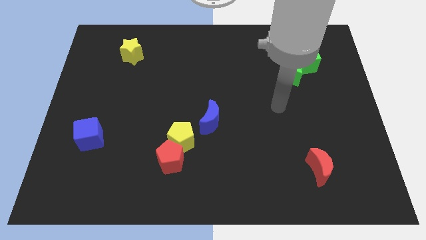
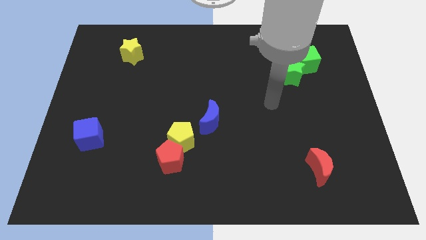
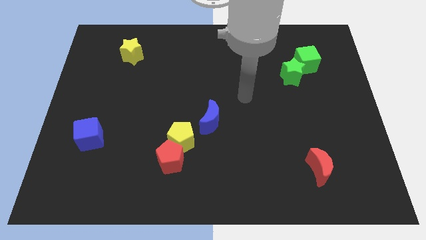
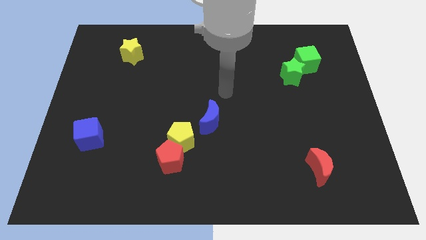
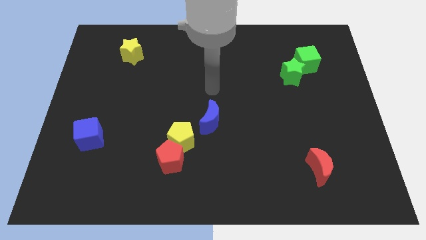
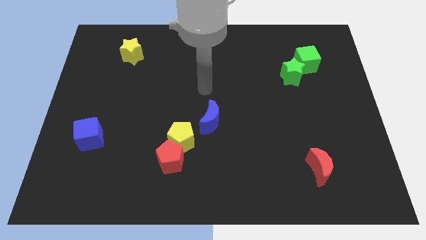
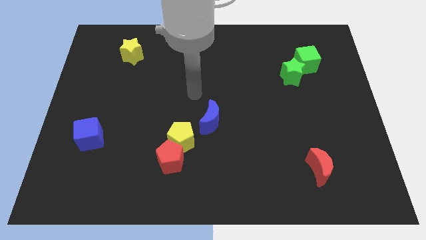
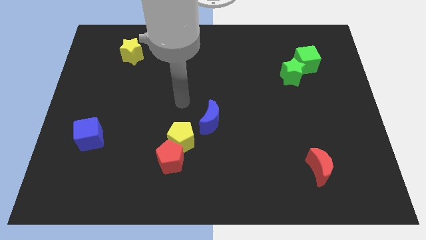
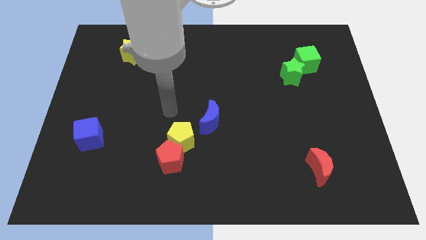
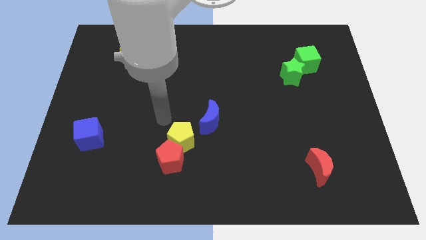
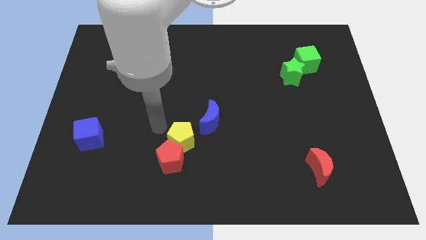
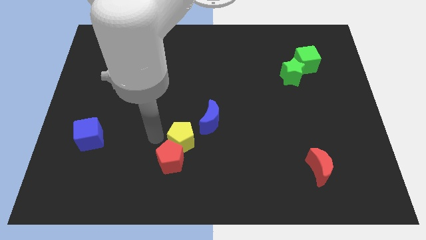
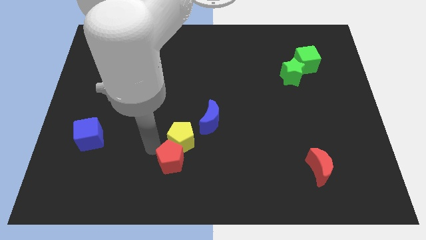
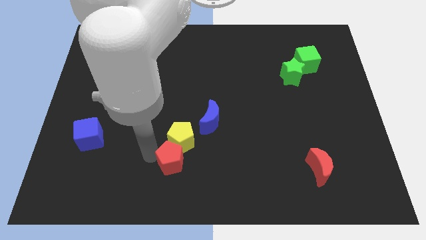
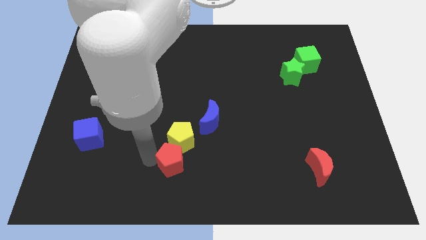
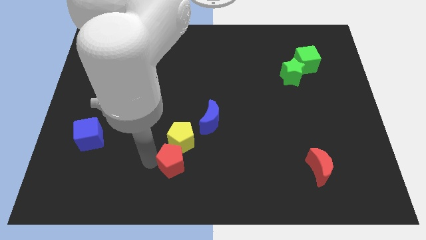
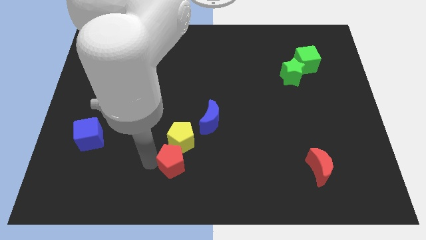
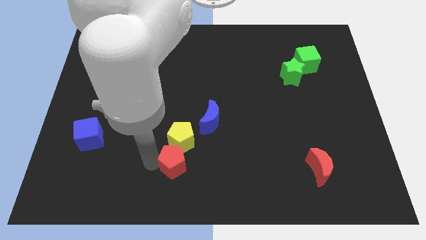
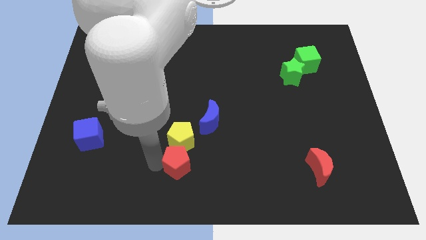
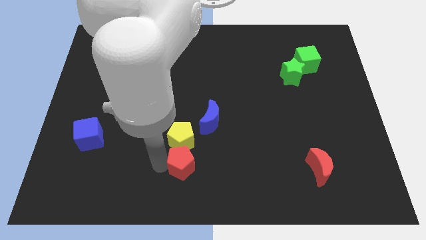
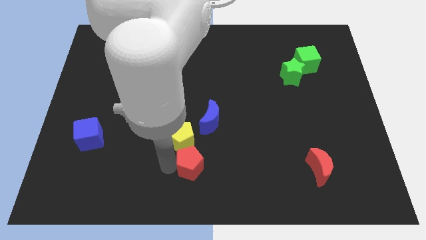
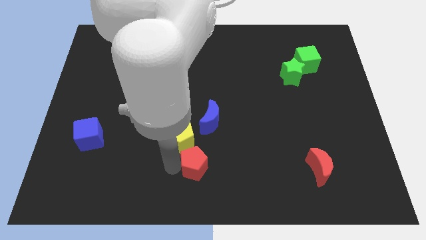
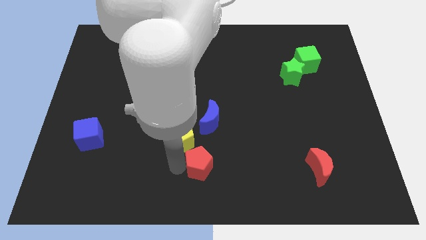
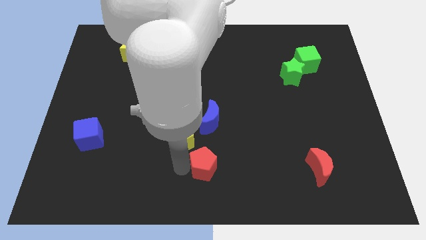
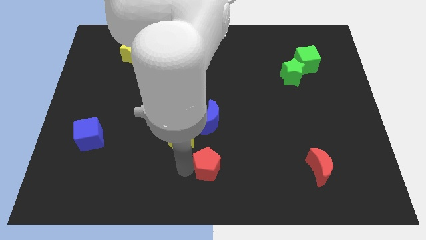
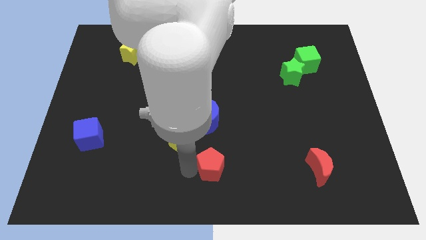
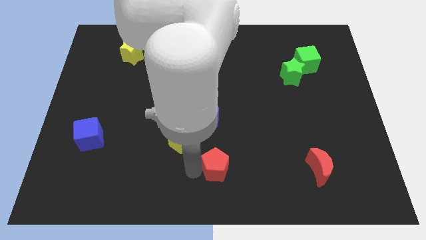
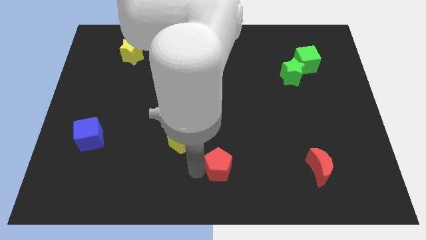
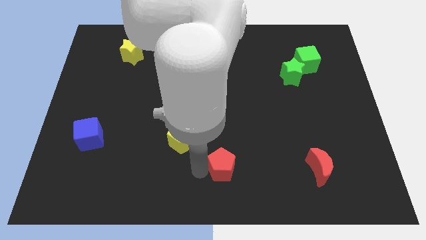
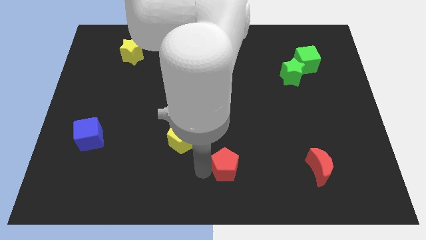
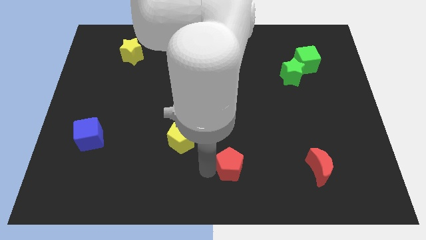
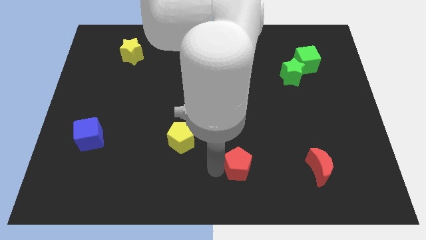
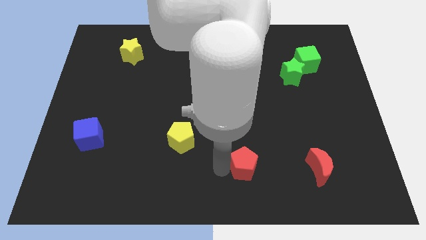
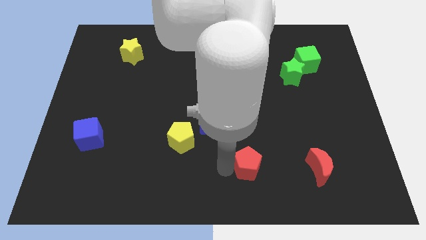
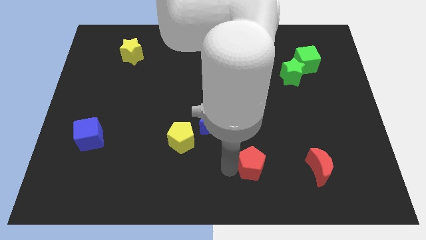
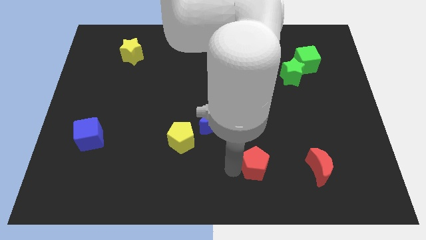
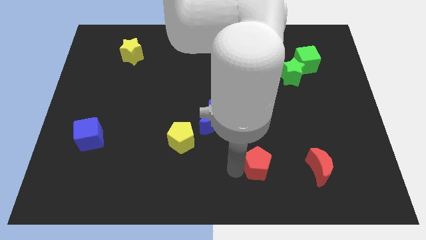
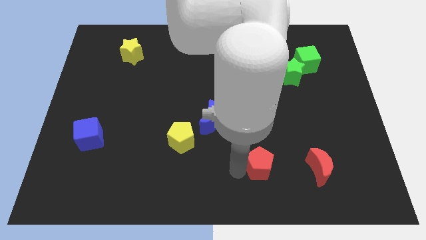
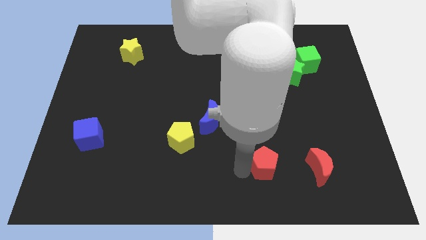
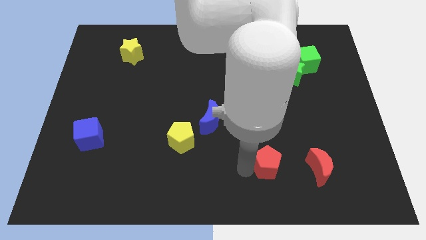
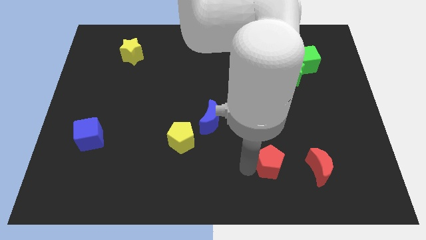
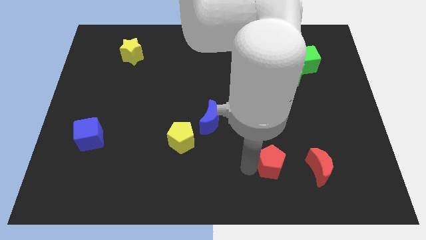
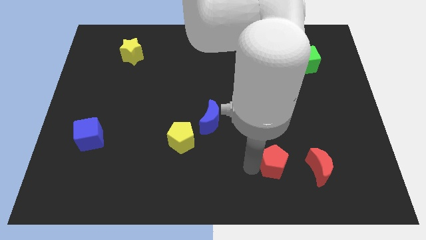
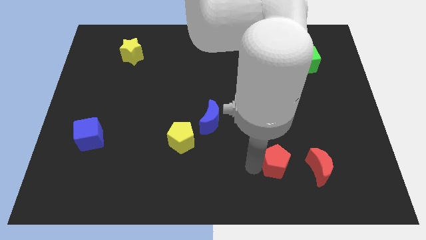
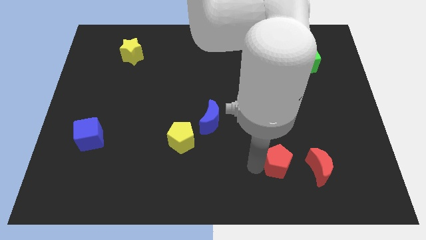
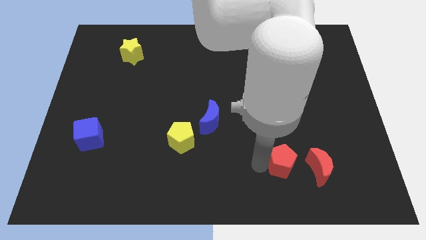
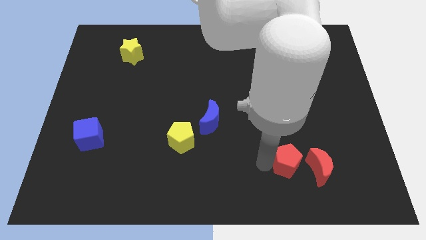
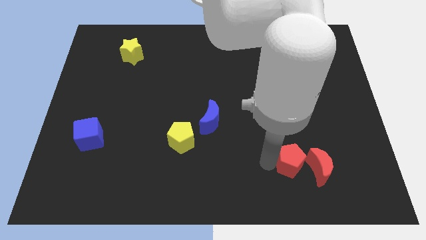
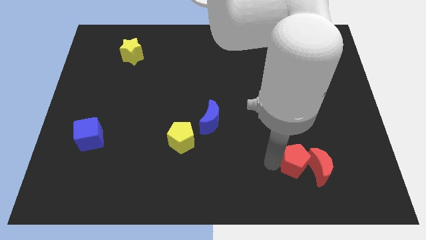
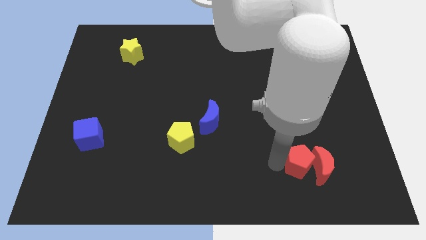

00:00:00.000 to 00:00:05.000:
push the red pentagon next to the red moon

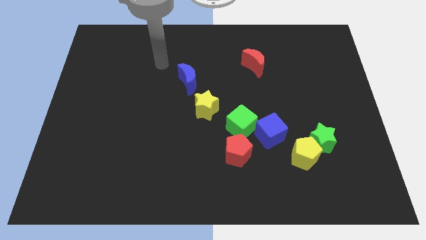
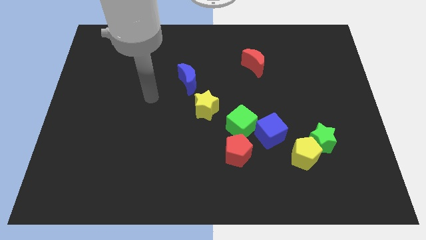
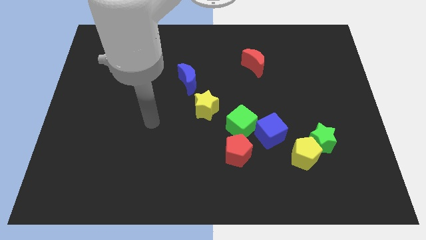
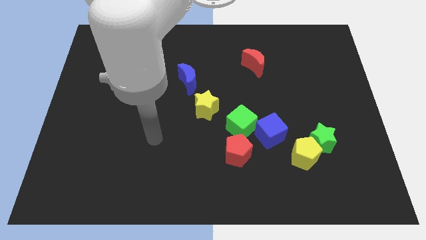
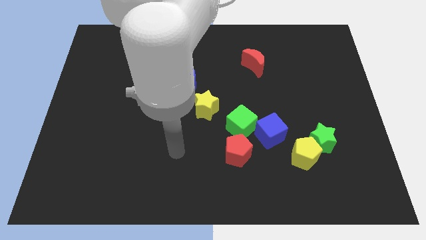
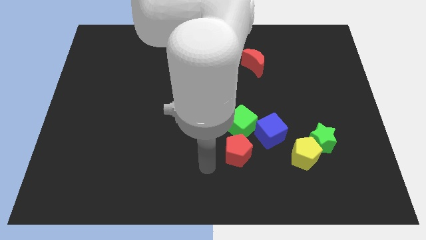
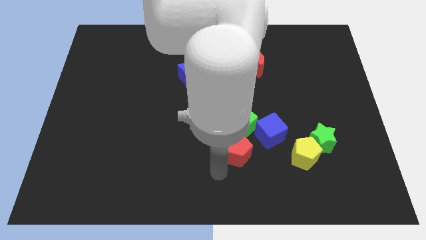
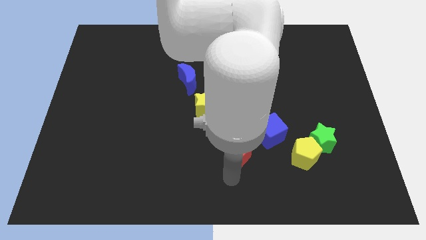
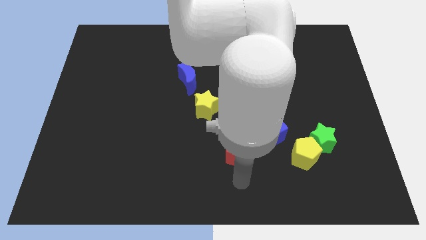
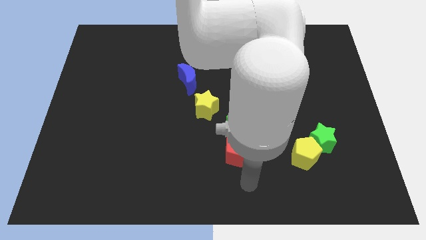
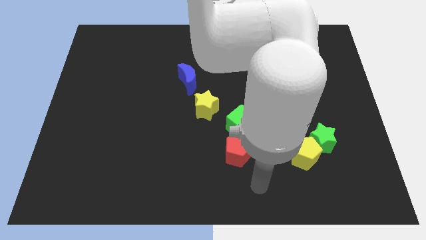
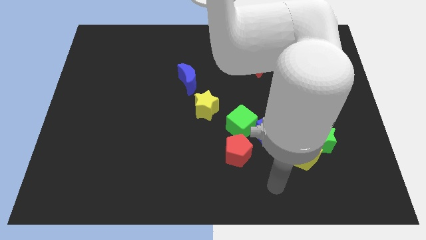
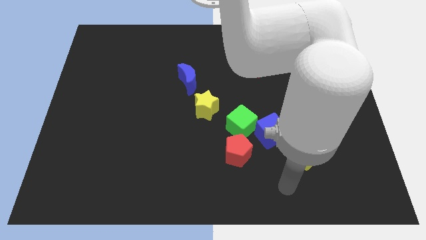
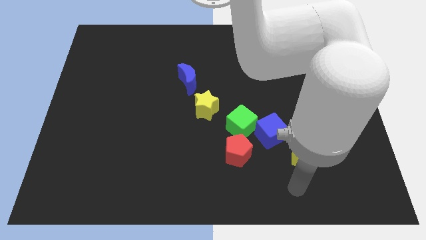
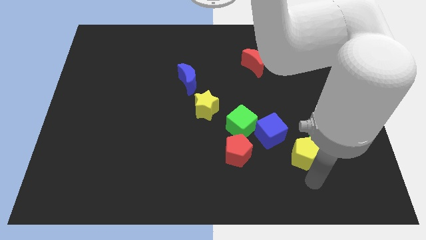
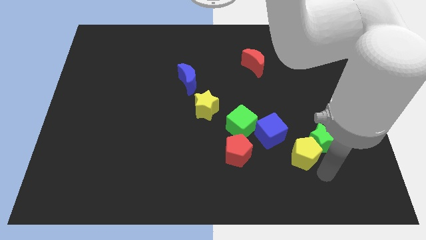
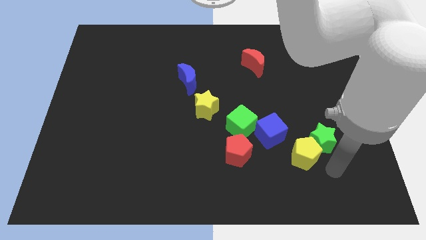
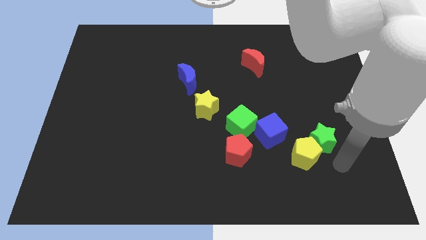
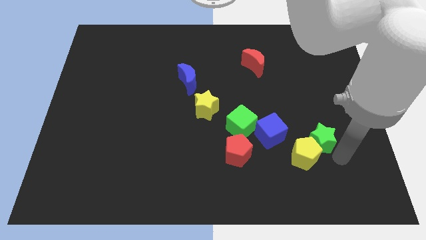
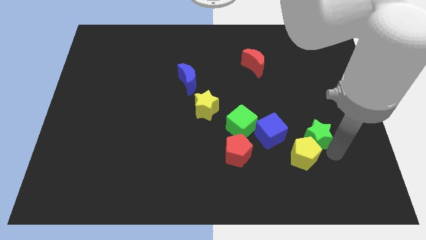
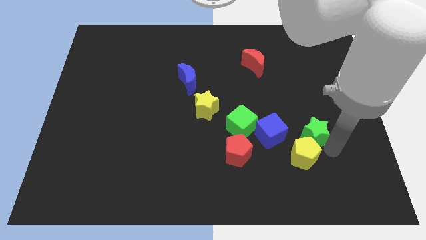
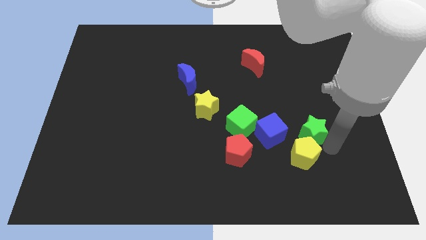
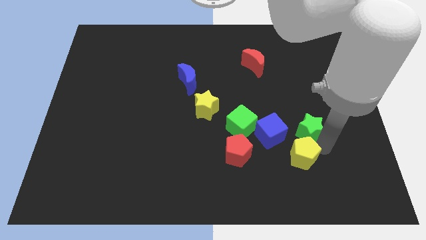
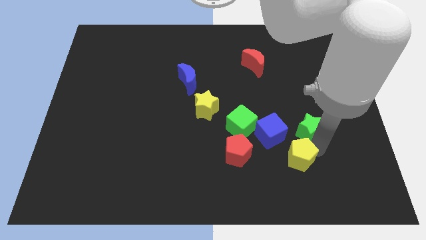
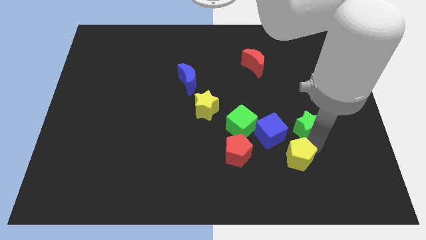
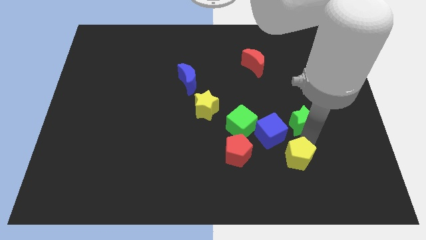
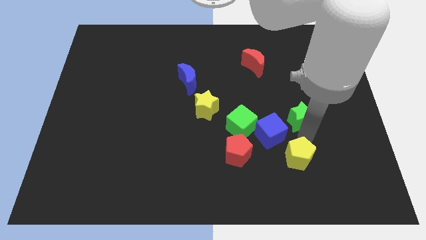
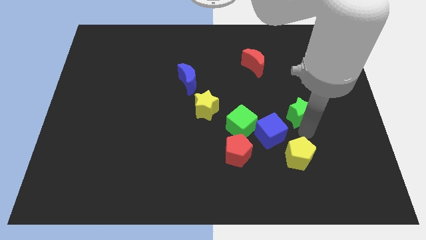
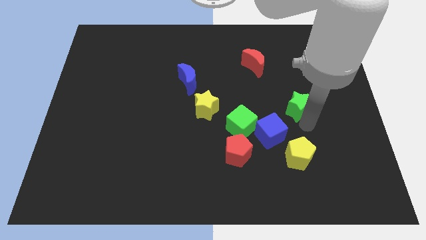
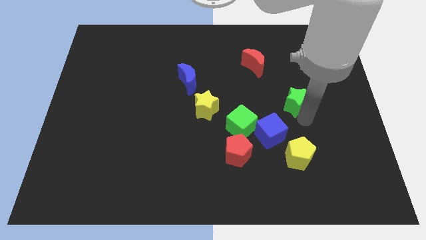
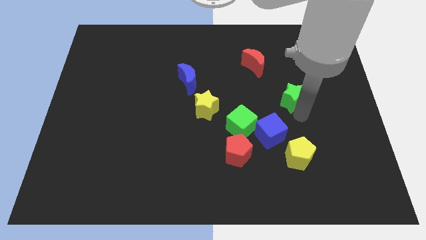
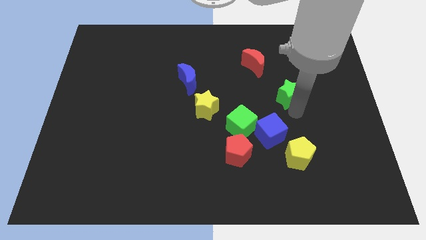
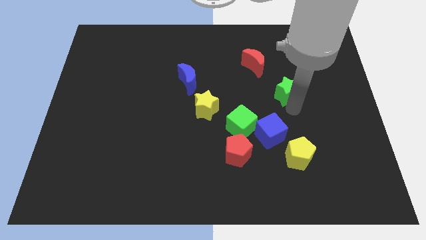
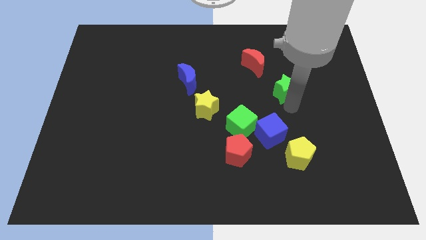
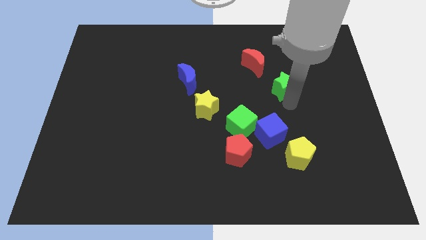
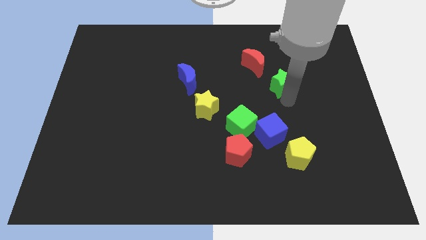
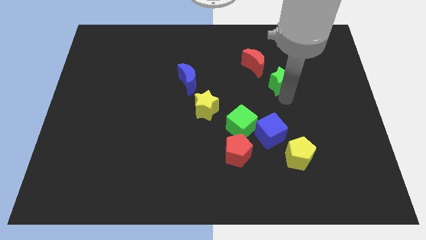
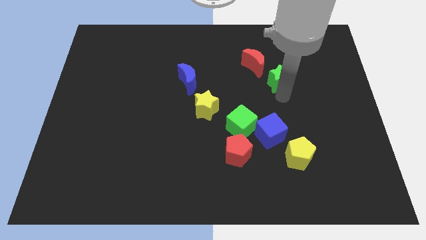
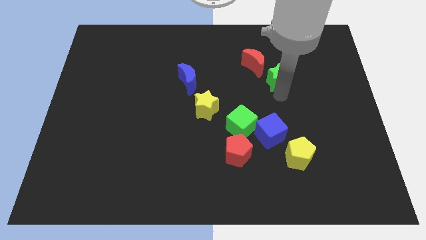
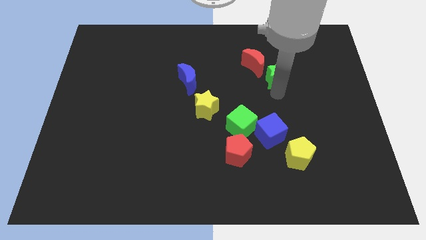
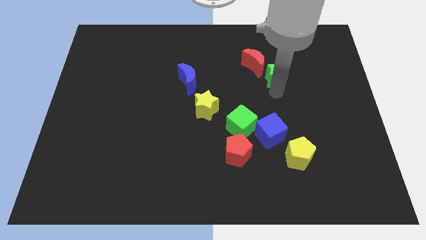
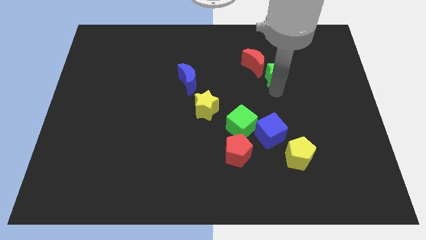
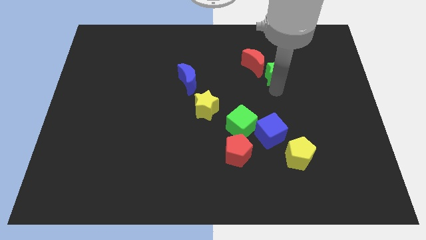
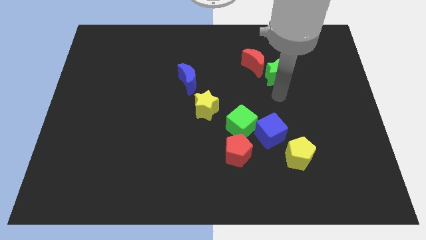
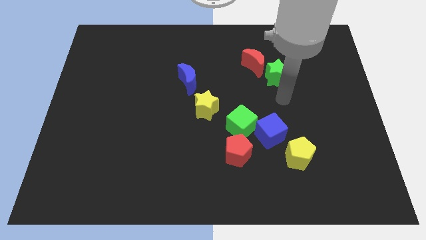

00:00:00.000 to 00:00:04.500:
move the green star next to the red moon
